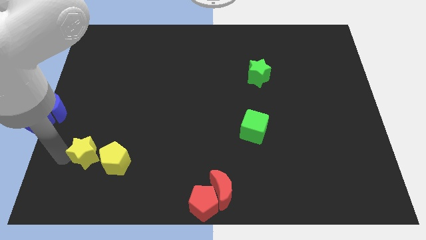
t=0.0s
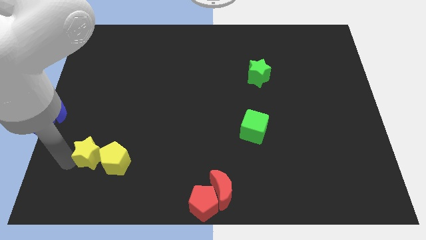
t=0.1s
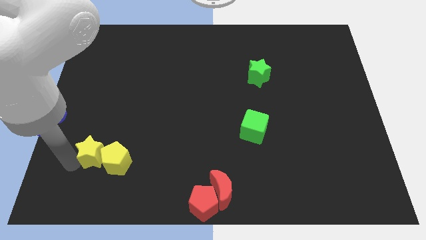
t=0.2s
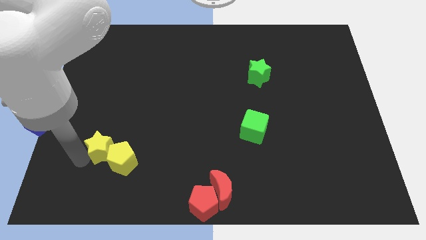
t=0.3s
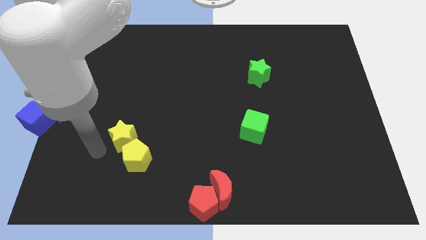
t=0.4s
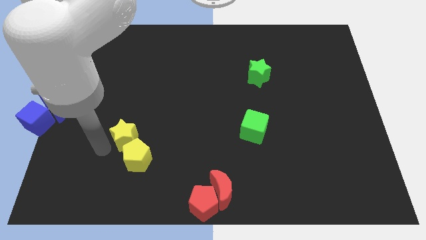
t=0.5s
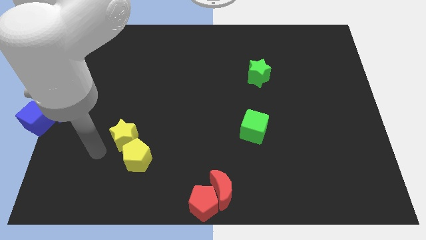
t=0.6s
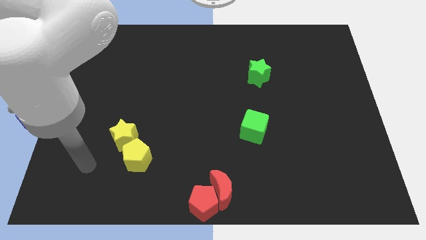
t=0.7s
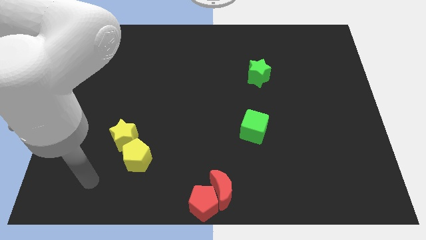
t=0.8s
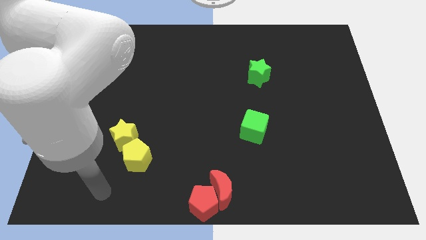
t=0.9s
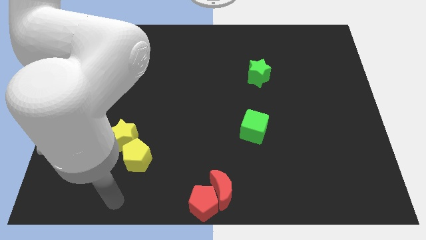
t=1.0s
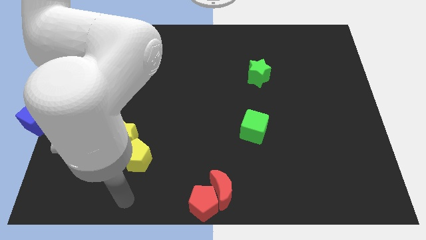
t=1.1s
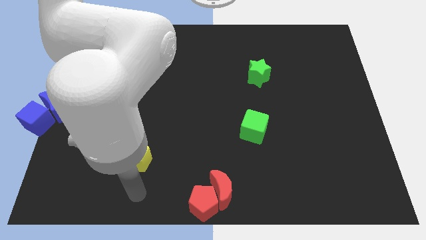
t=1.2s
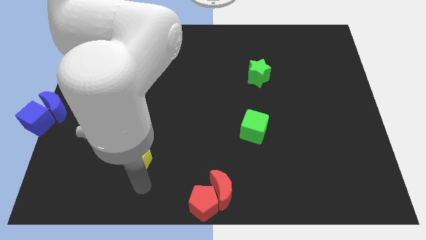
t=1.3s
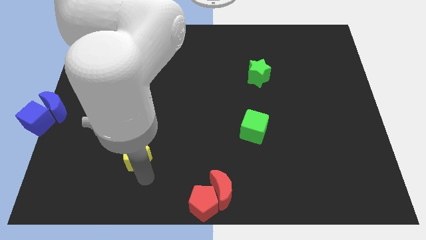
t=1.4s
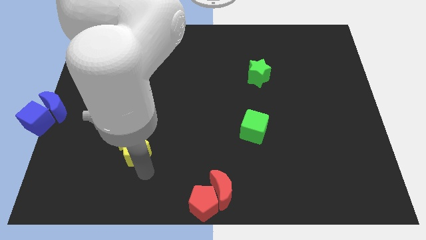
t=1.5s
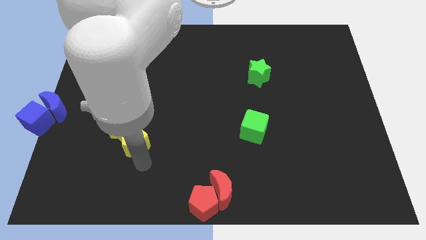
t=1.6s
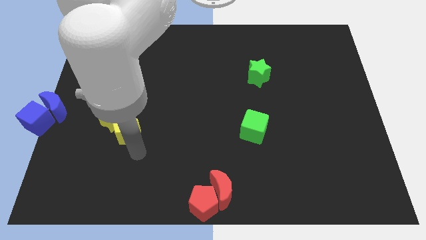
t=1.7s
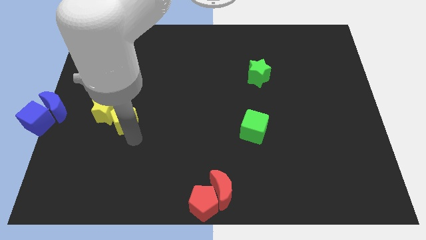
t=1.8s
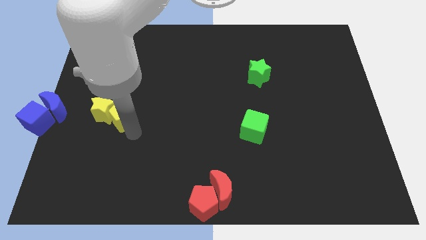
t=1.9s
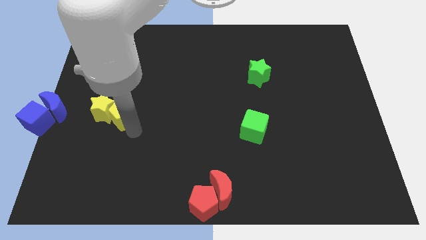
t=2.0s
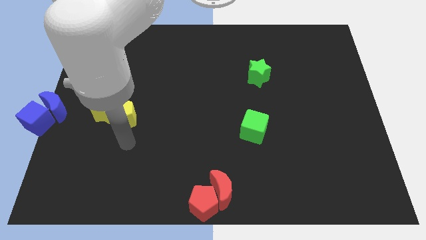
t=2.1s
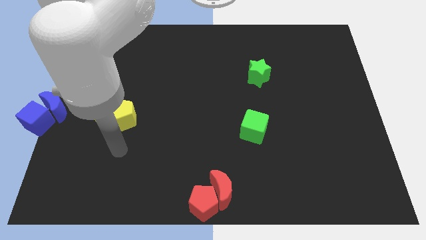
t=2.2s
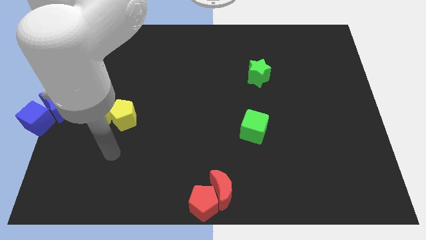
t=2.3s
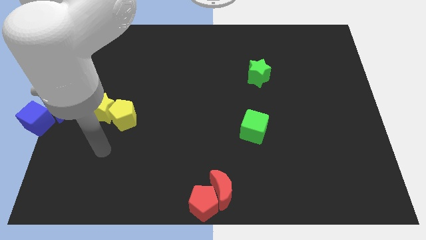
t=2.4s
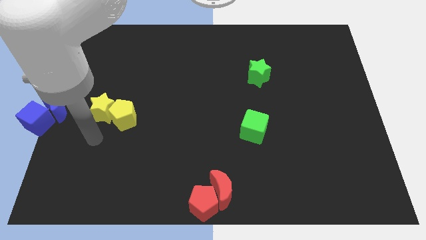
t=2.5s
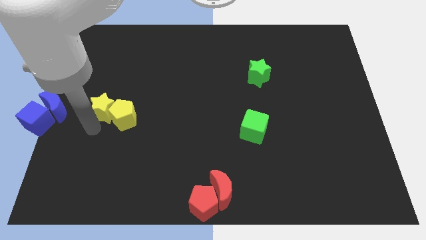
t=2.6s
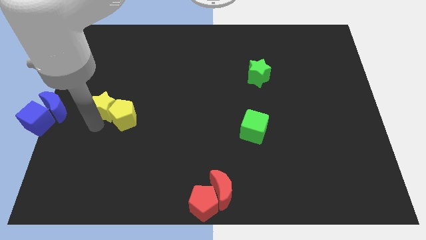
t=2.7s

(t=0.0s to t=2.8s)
move the yellow blocks to the right of the blue blocks

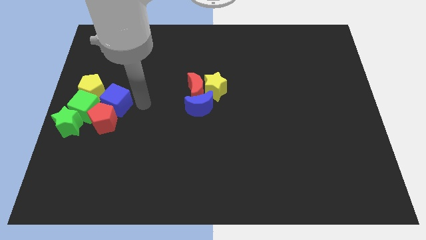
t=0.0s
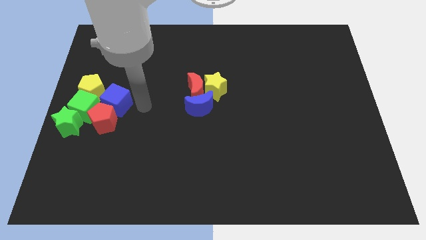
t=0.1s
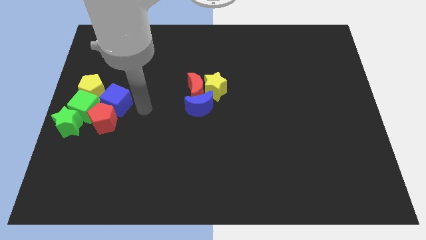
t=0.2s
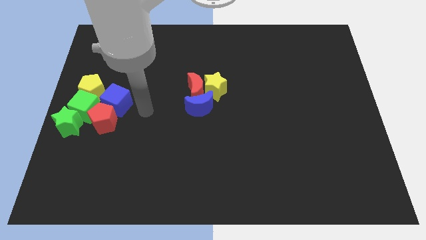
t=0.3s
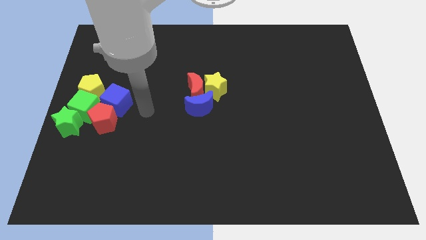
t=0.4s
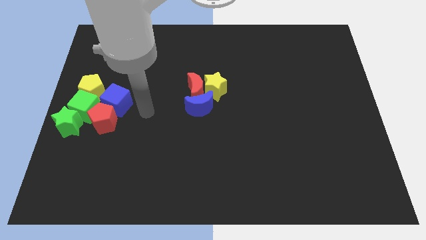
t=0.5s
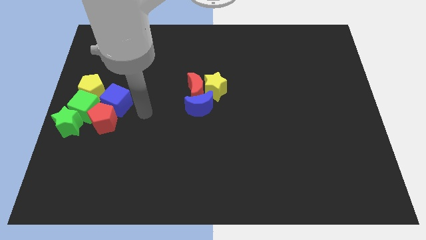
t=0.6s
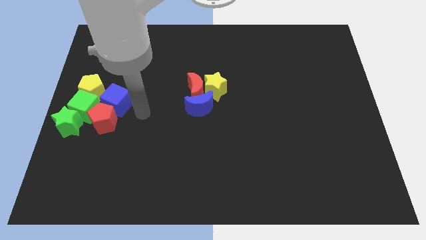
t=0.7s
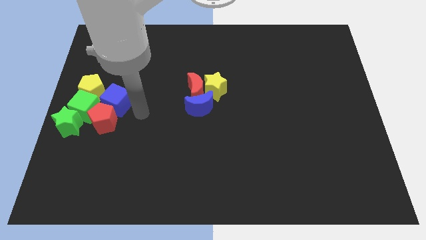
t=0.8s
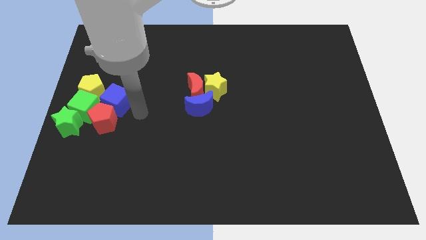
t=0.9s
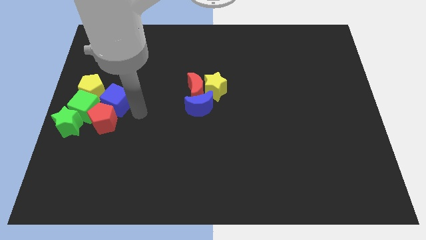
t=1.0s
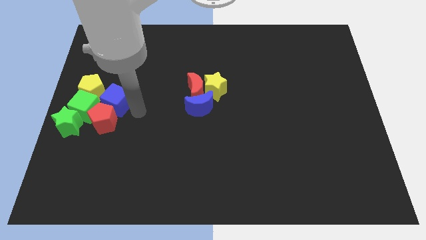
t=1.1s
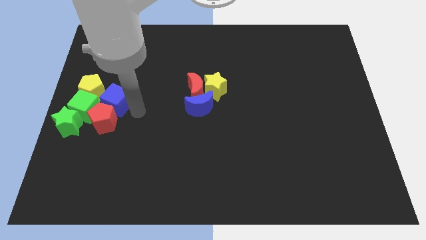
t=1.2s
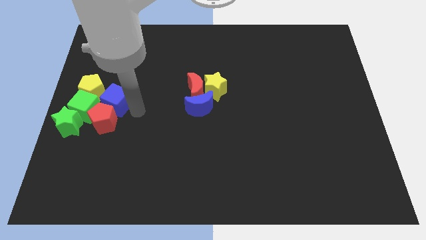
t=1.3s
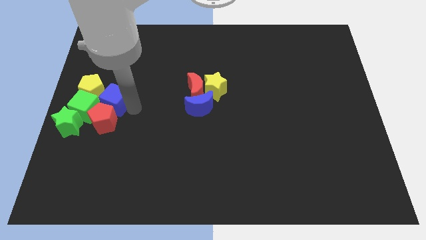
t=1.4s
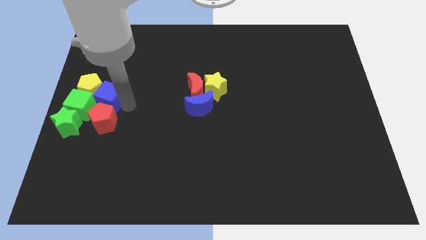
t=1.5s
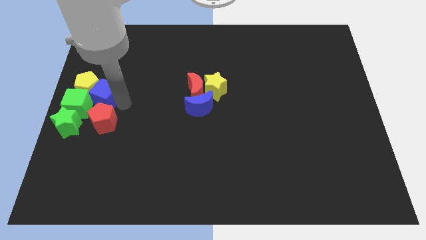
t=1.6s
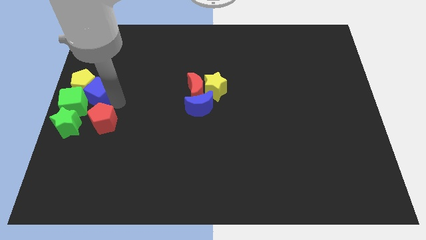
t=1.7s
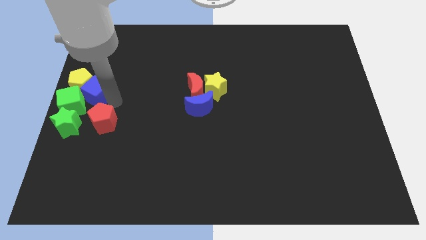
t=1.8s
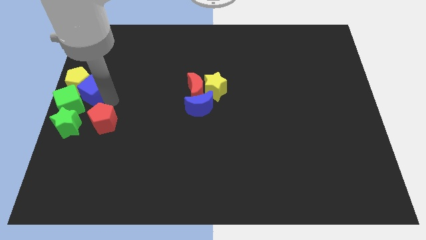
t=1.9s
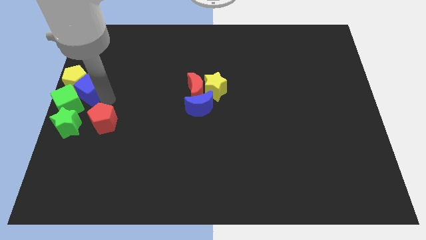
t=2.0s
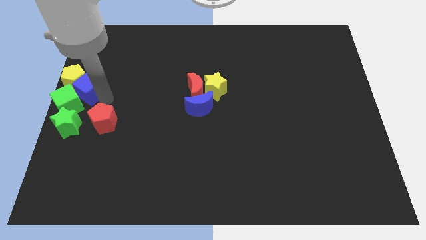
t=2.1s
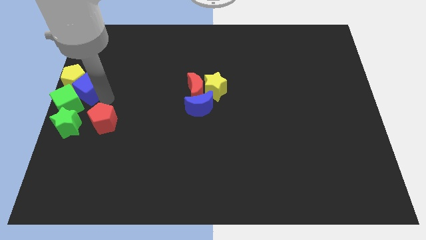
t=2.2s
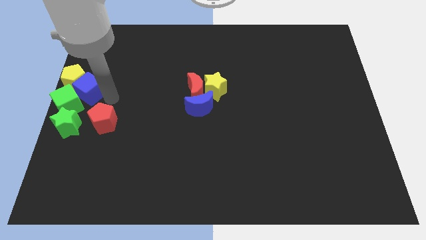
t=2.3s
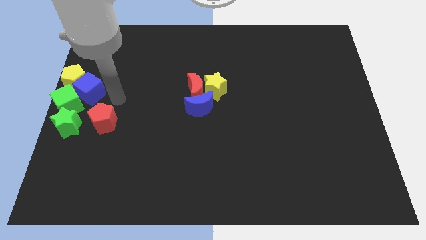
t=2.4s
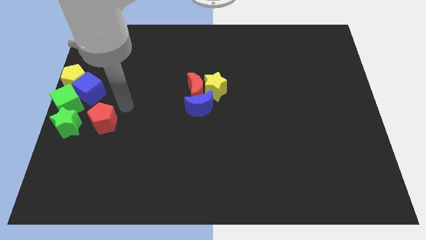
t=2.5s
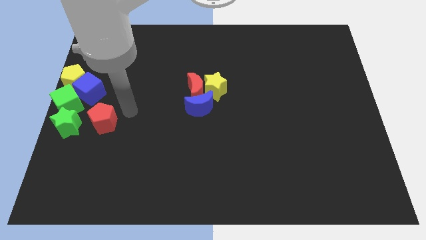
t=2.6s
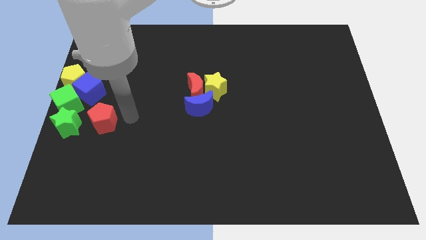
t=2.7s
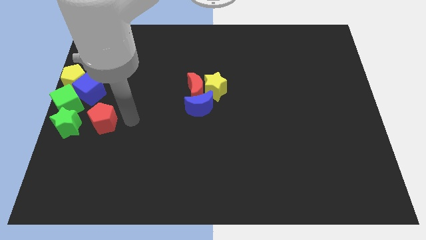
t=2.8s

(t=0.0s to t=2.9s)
push blue cube into group of blocks

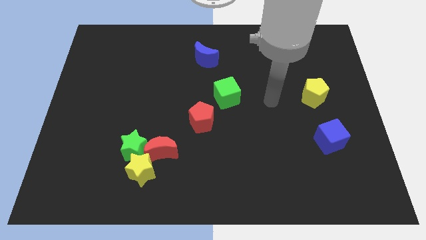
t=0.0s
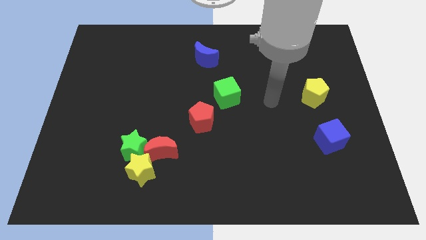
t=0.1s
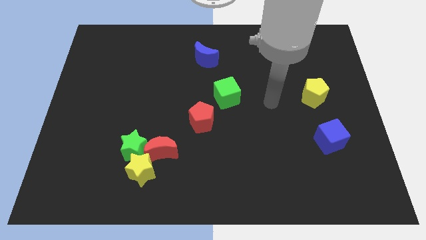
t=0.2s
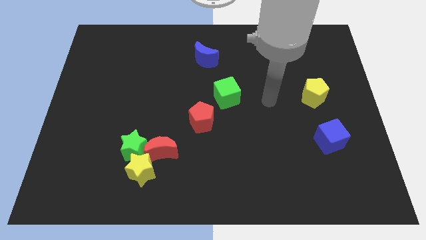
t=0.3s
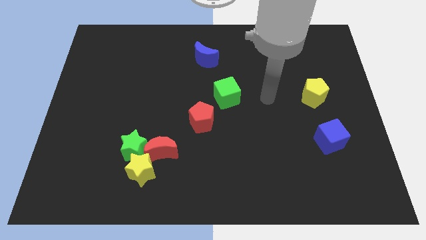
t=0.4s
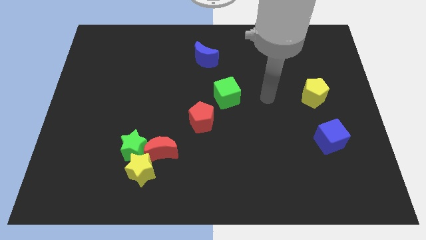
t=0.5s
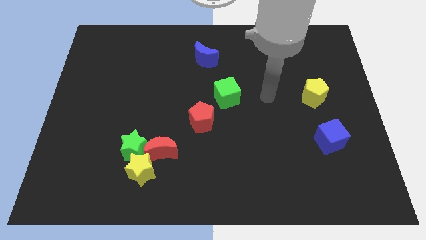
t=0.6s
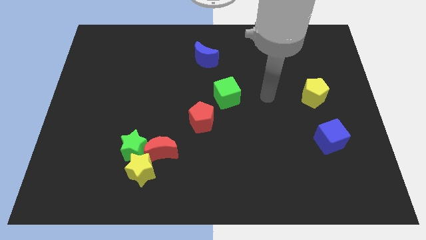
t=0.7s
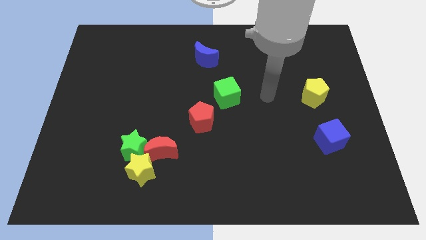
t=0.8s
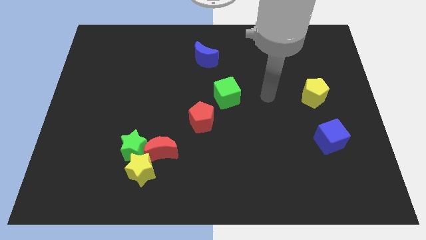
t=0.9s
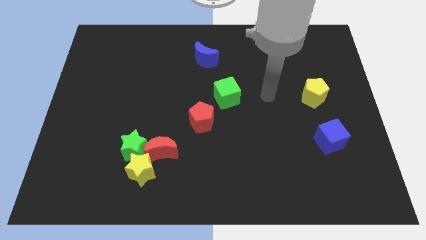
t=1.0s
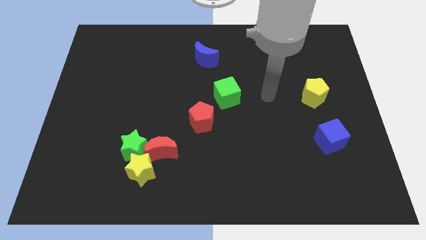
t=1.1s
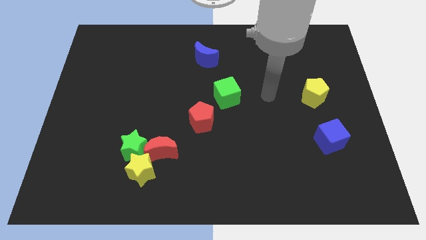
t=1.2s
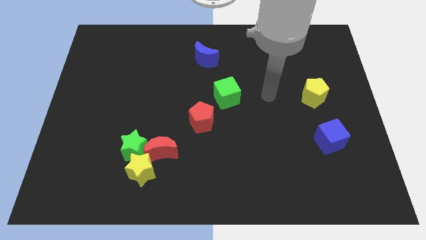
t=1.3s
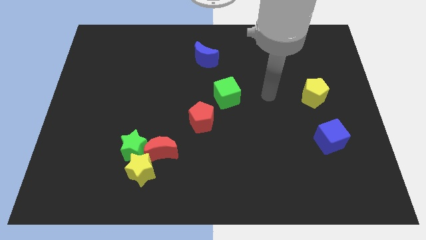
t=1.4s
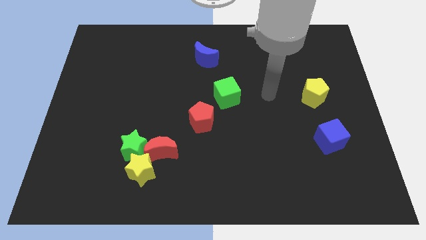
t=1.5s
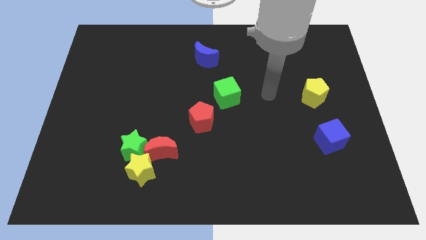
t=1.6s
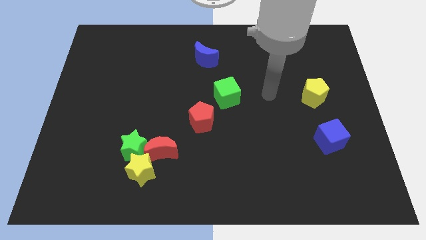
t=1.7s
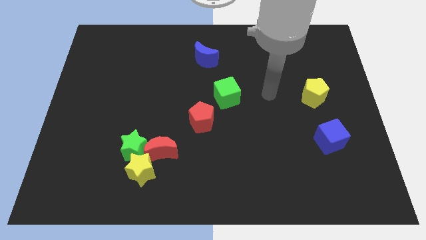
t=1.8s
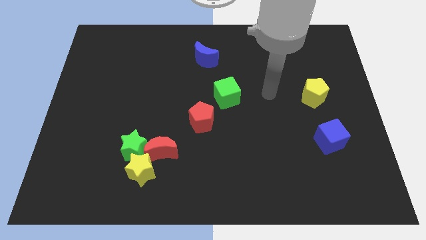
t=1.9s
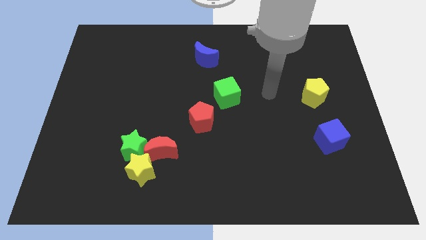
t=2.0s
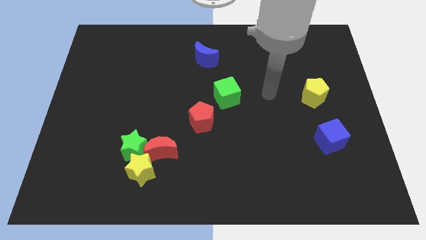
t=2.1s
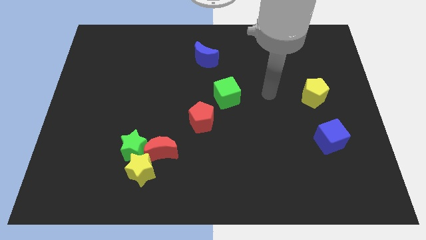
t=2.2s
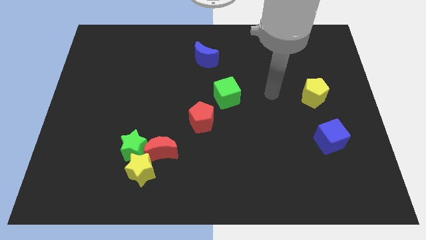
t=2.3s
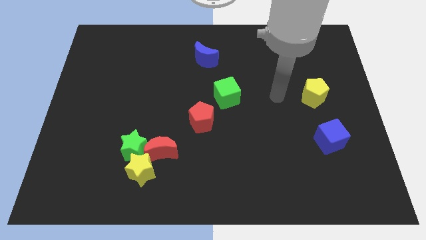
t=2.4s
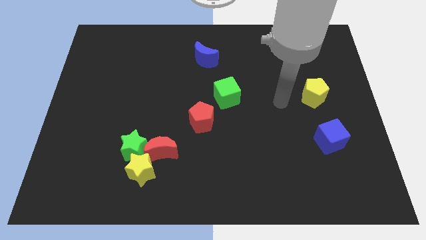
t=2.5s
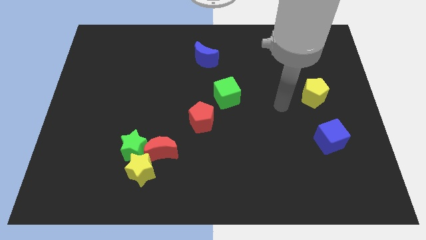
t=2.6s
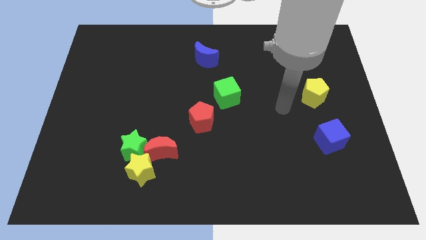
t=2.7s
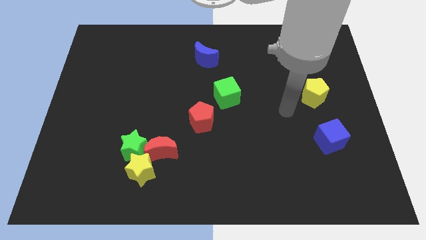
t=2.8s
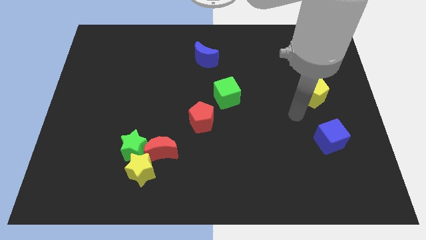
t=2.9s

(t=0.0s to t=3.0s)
move the arm to the bottom left to the yellow pentagon

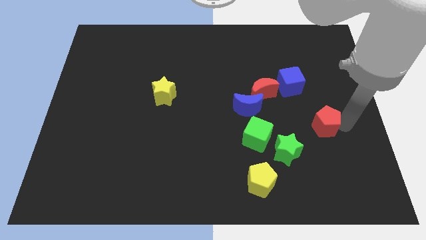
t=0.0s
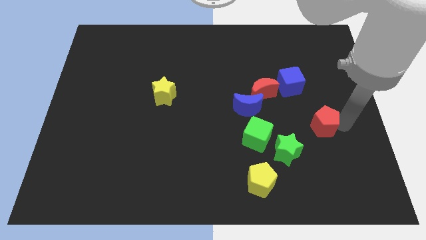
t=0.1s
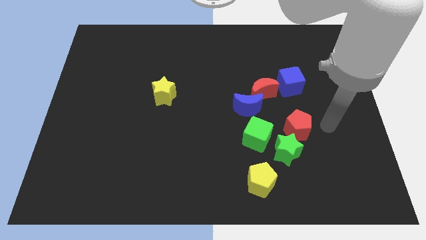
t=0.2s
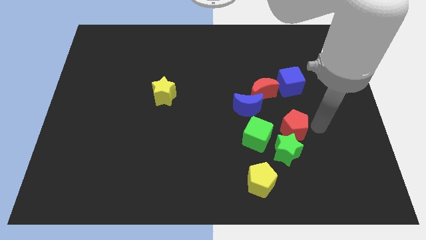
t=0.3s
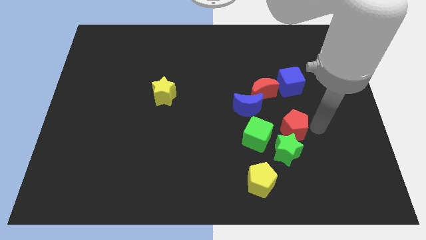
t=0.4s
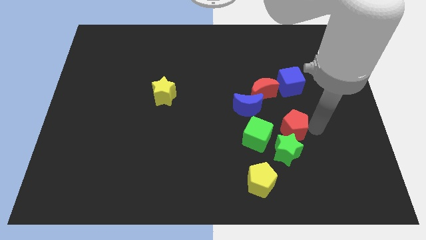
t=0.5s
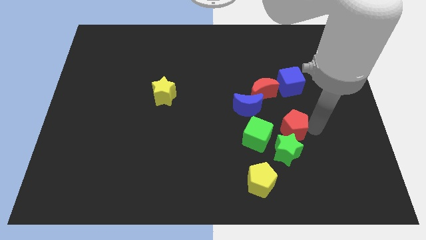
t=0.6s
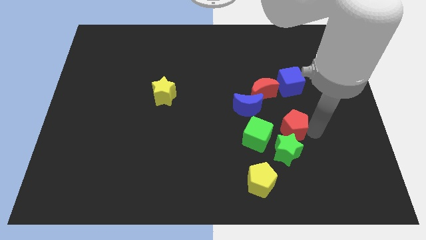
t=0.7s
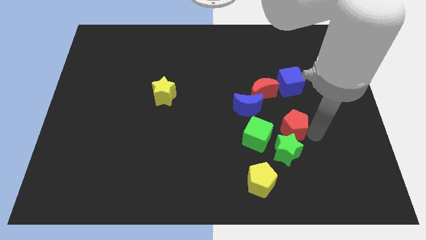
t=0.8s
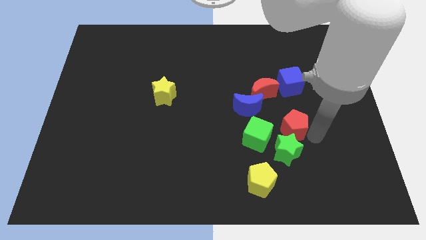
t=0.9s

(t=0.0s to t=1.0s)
move the red pentagon close to the top side of the green star
